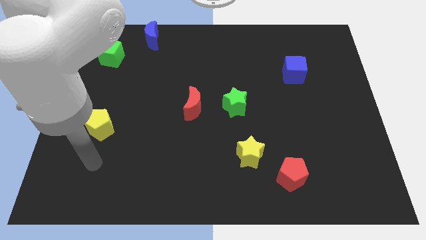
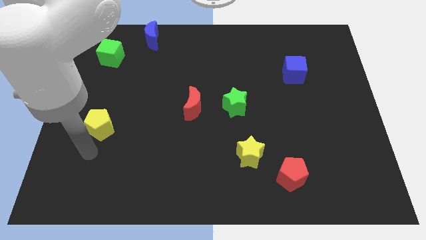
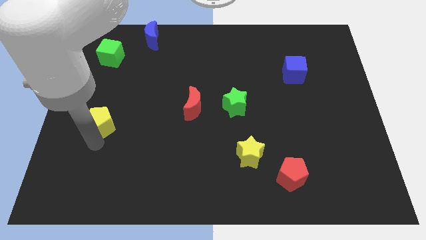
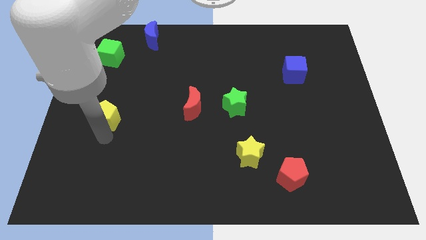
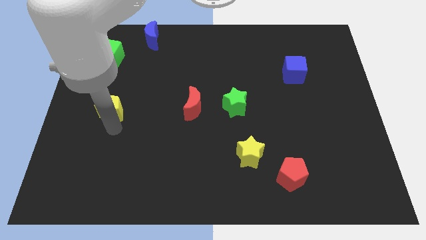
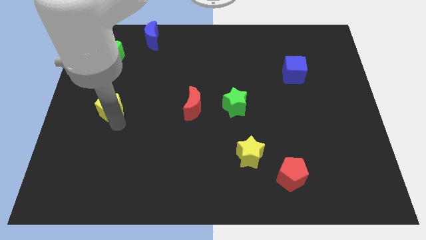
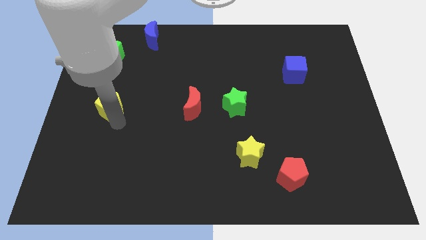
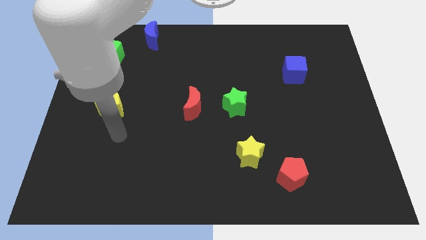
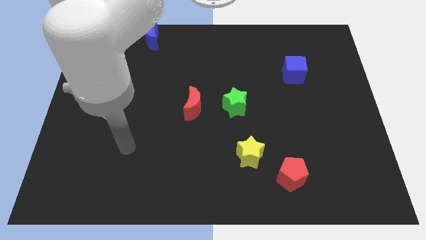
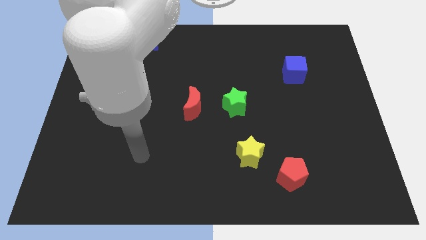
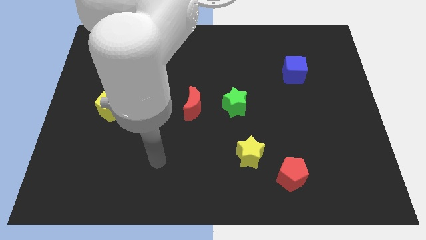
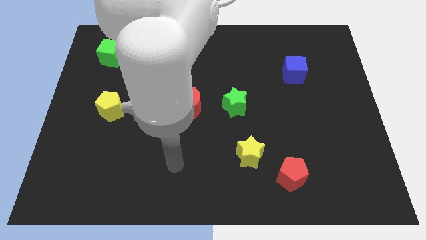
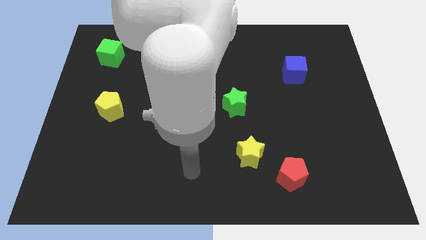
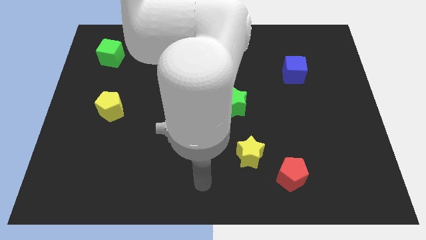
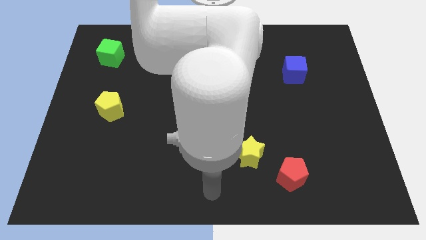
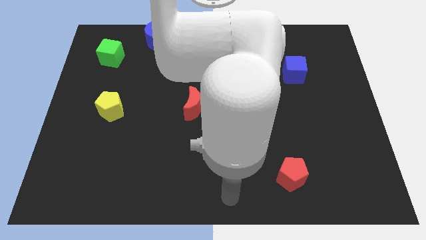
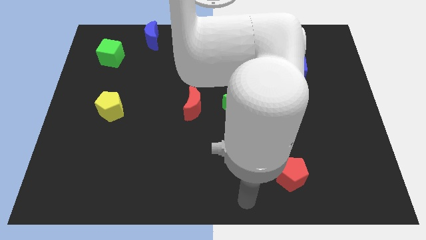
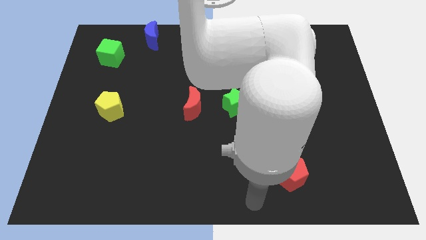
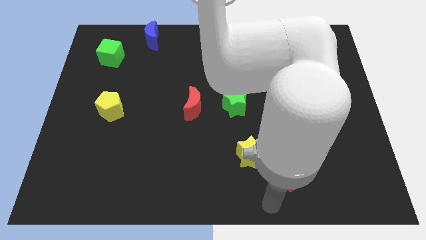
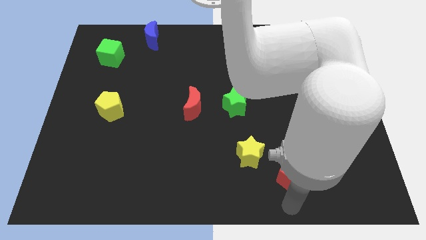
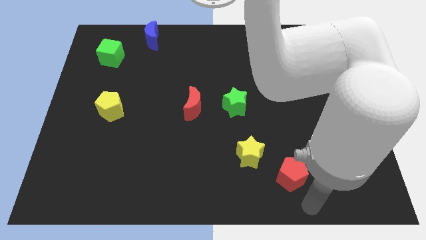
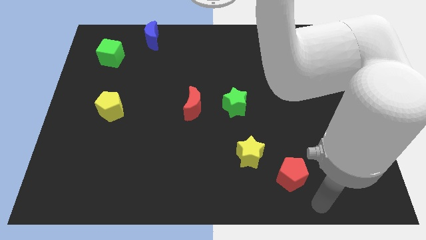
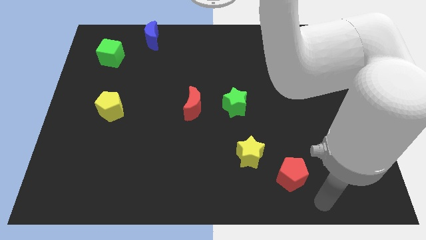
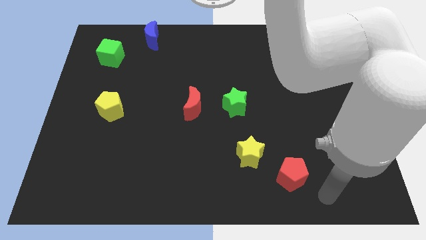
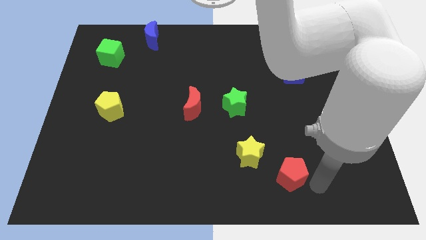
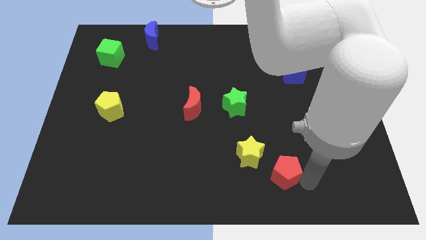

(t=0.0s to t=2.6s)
place the arm right to the red pentagon

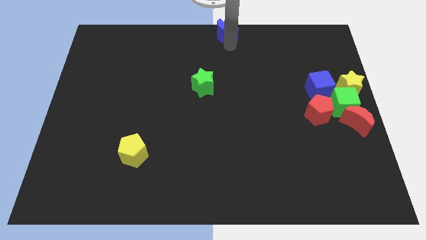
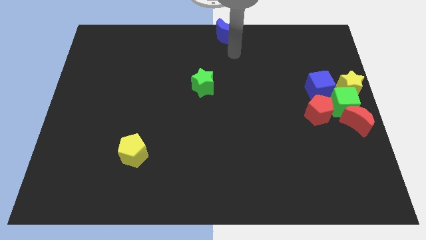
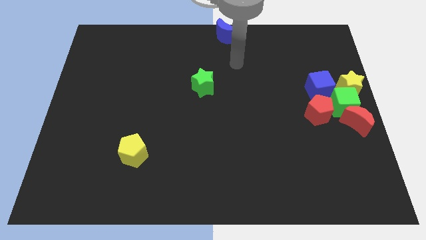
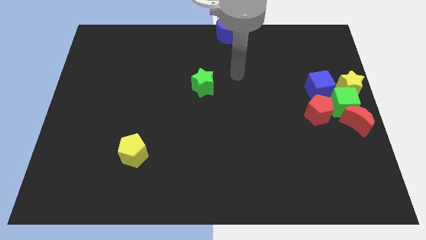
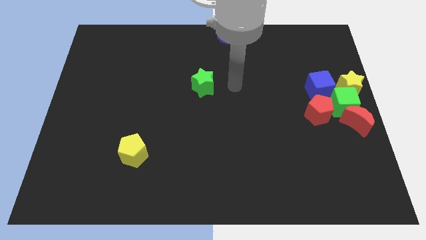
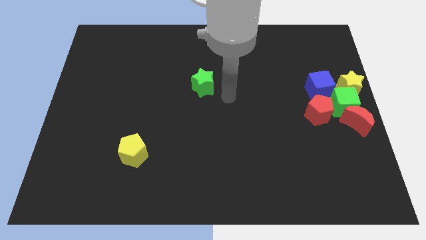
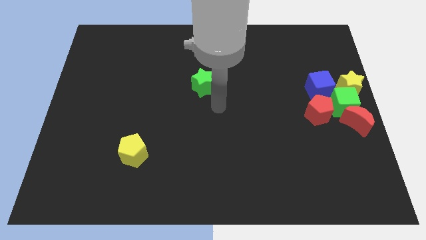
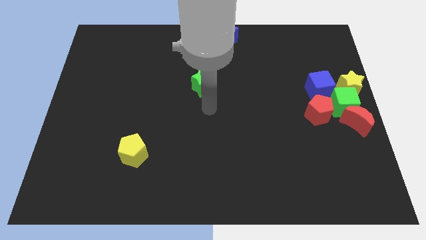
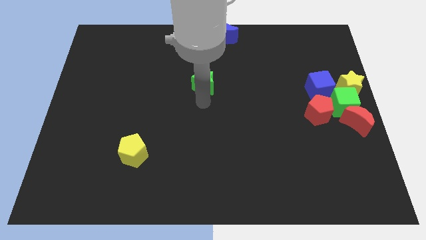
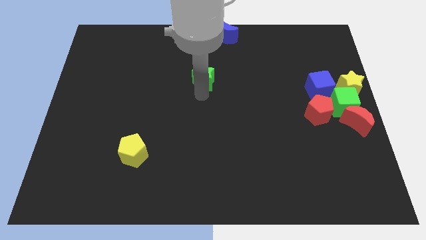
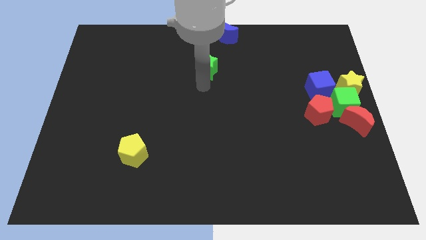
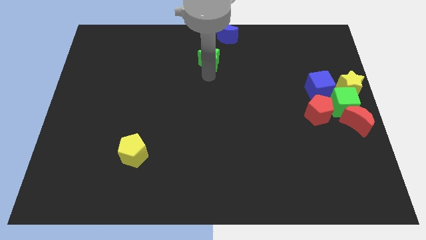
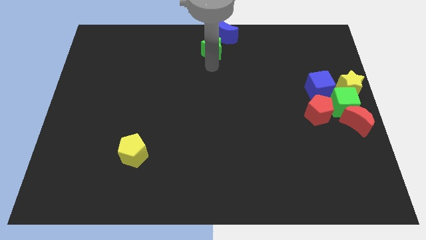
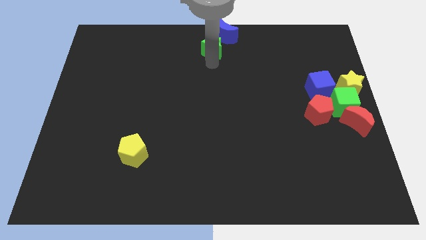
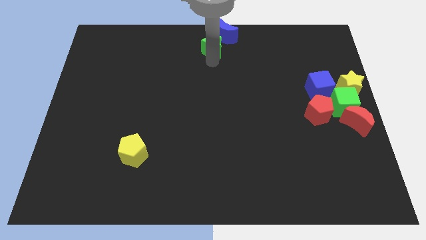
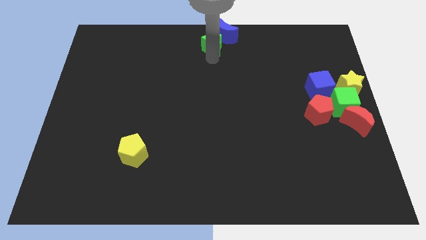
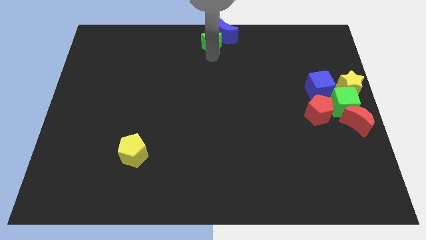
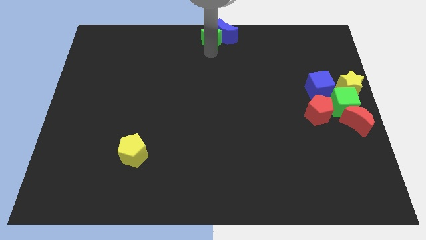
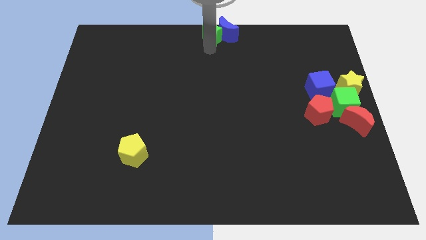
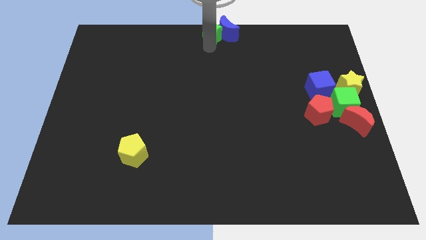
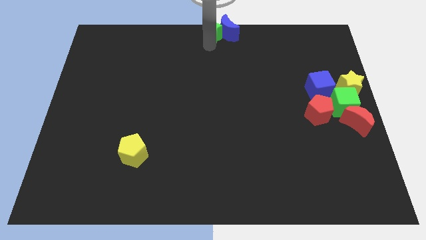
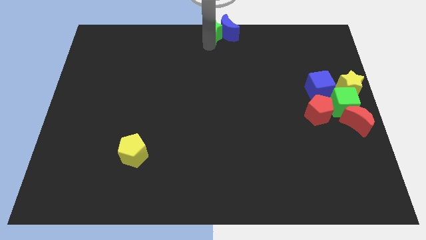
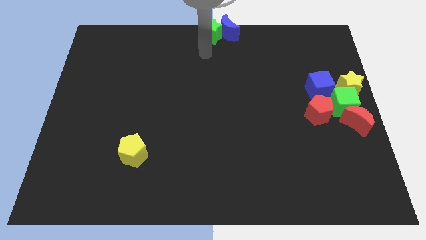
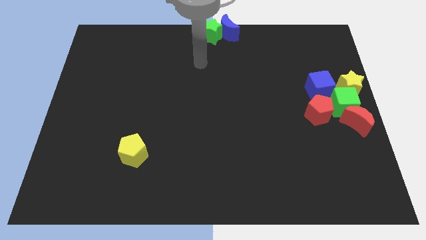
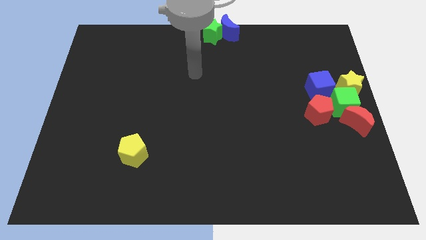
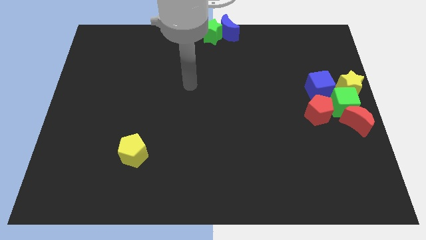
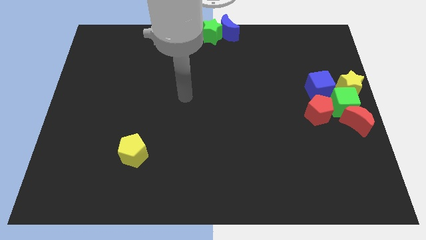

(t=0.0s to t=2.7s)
move the green star to the left of the blue crescent

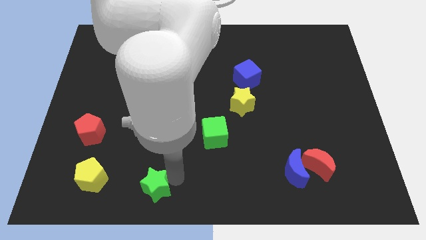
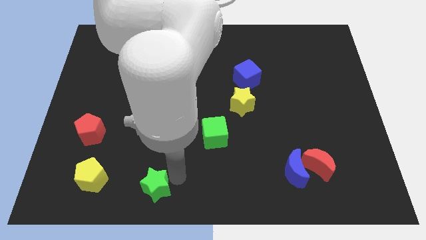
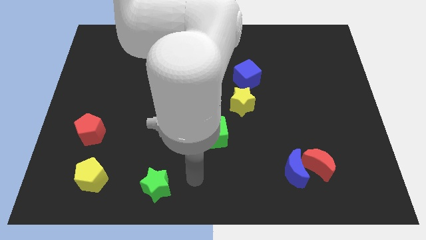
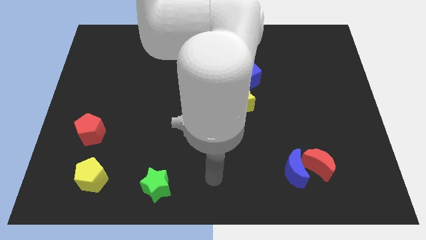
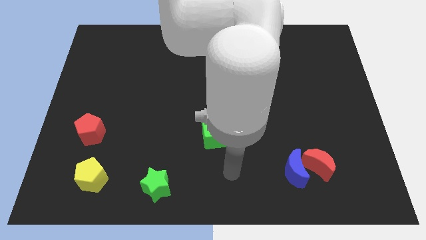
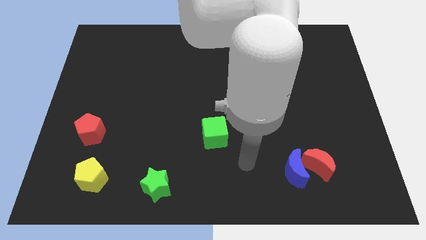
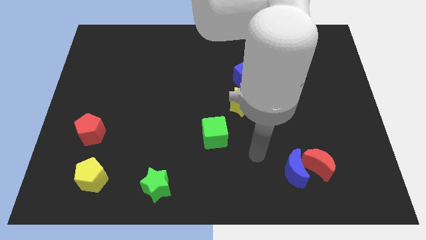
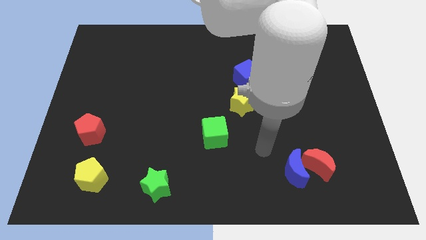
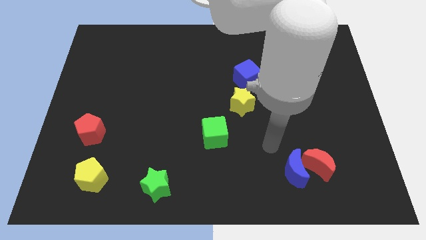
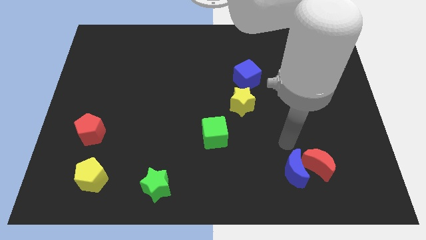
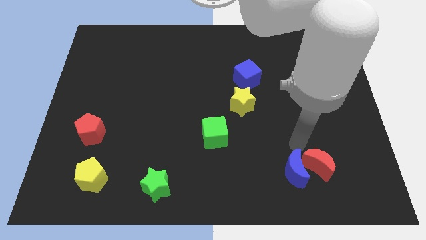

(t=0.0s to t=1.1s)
move the arm towards the blue moon to the bottom right of the board

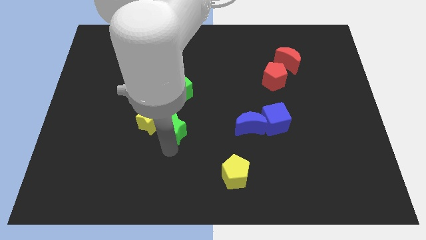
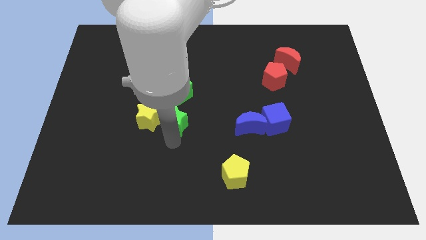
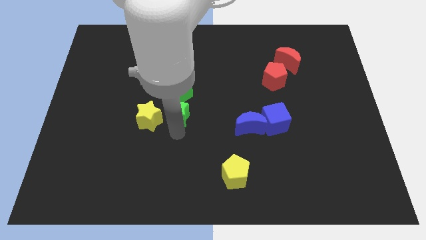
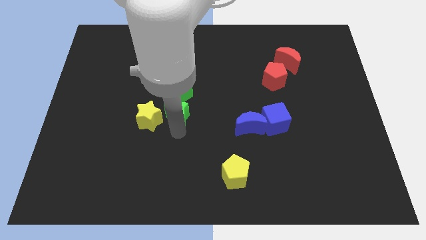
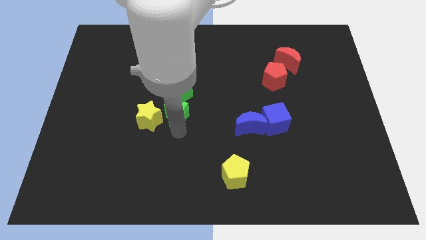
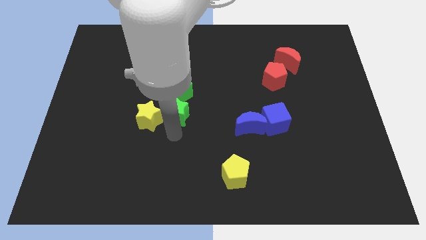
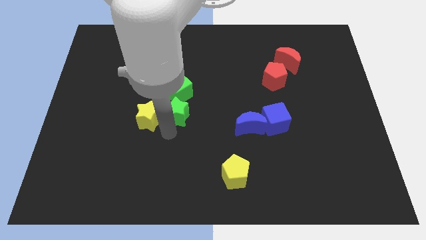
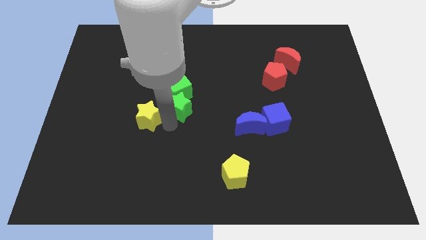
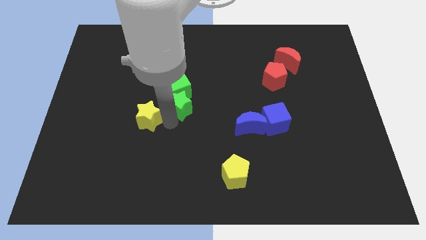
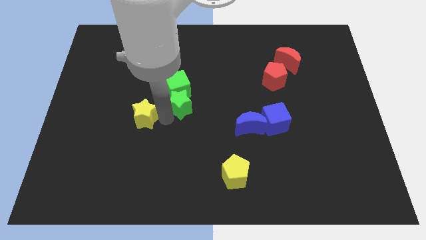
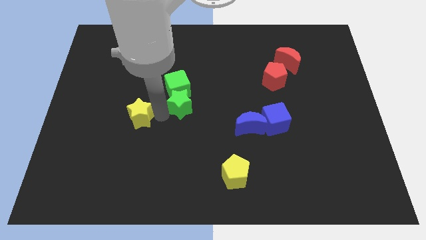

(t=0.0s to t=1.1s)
place green star below green cube

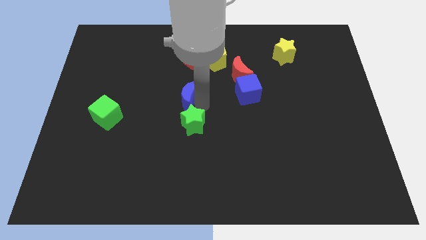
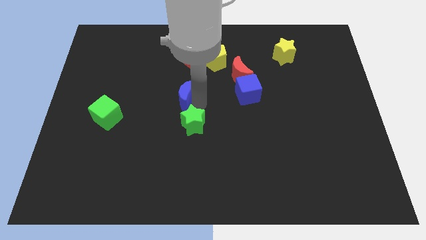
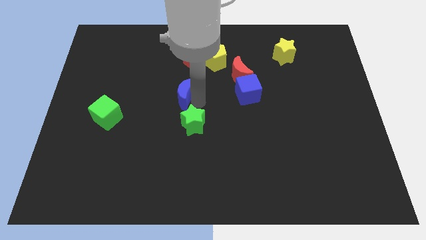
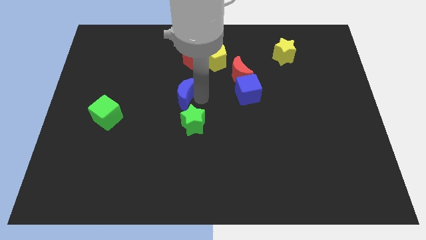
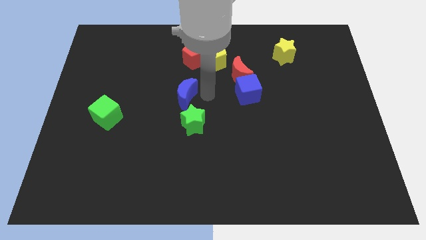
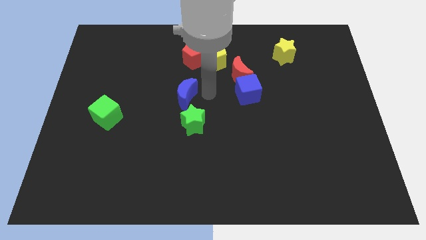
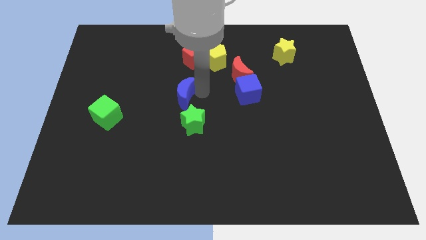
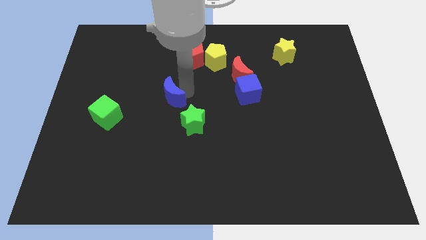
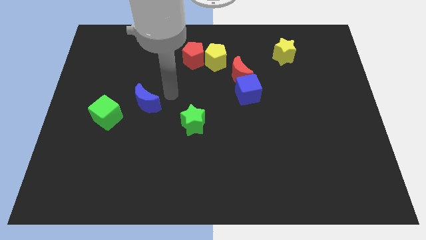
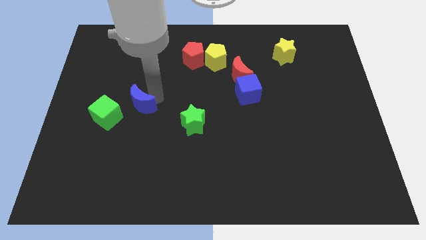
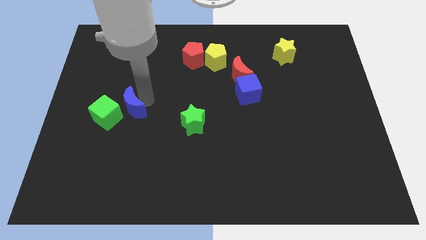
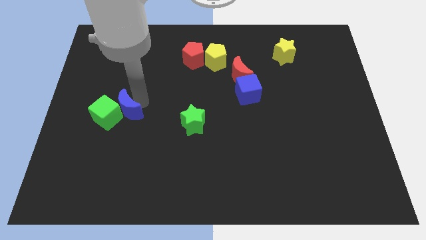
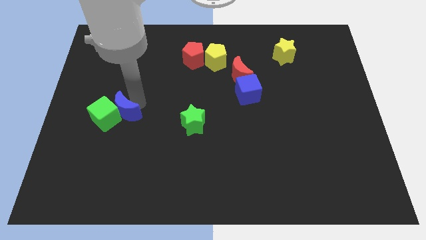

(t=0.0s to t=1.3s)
push the blue crescent to the top right side of the green cube
